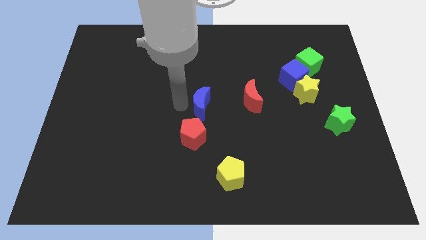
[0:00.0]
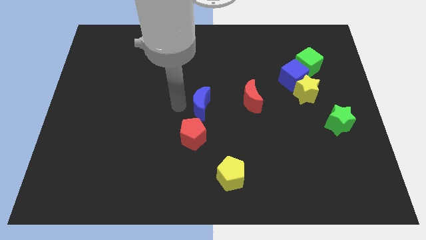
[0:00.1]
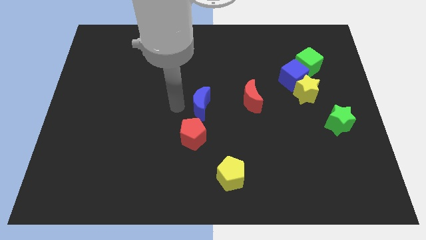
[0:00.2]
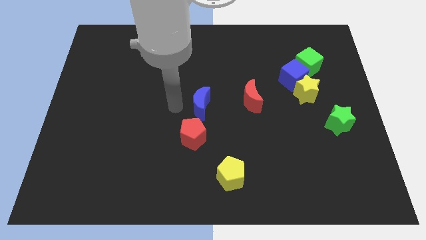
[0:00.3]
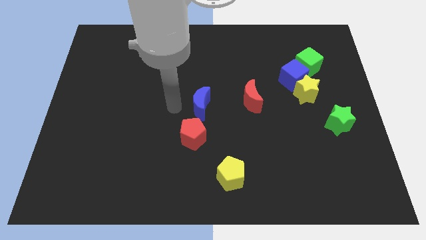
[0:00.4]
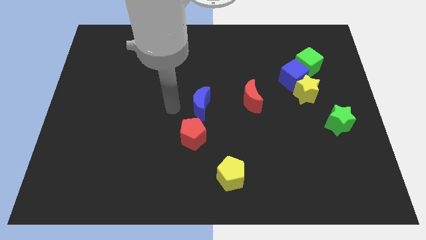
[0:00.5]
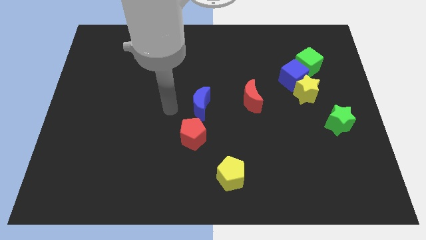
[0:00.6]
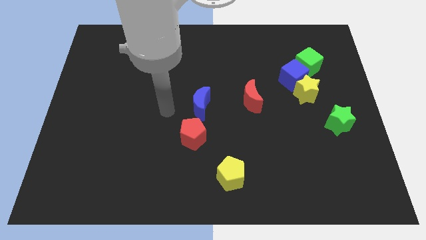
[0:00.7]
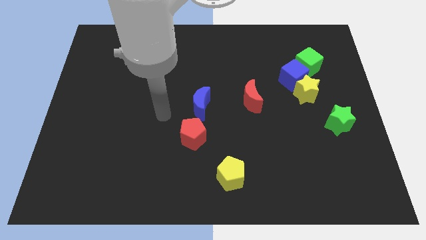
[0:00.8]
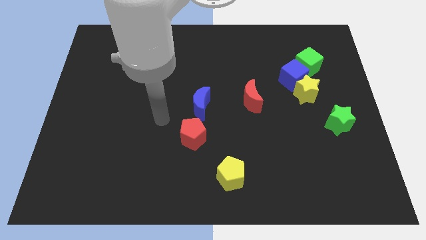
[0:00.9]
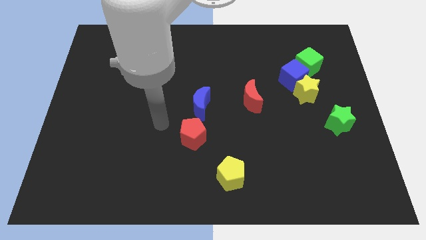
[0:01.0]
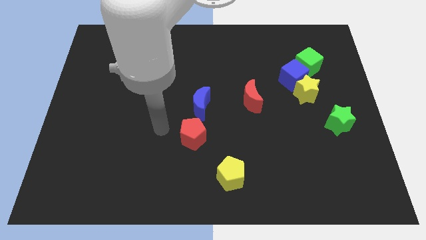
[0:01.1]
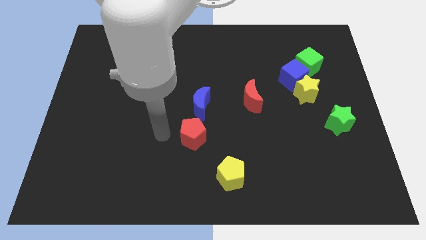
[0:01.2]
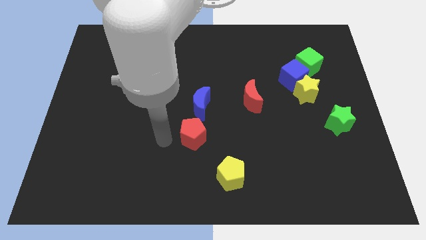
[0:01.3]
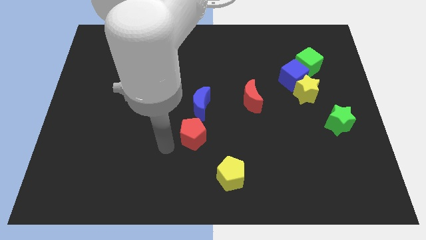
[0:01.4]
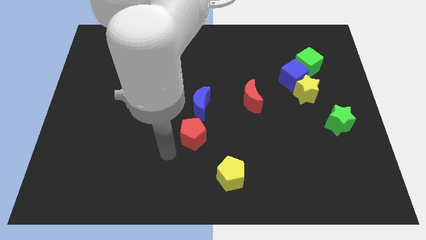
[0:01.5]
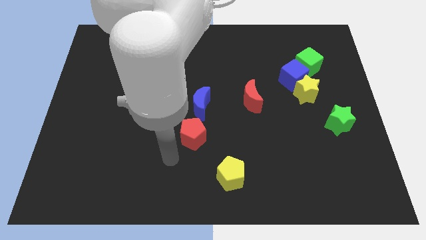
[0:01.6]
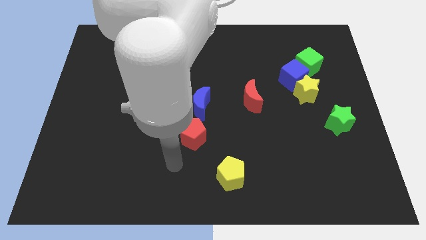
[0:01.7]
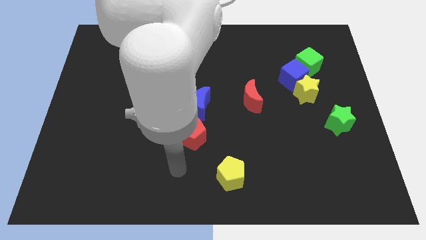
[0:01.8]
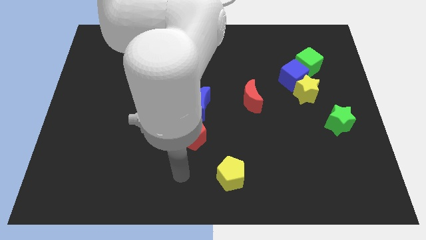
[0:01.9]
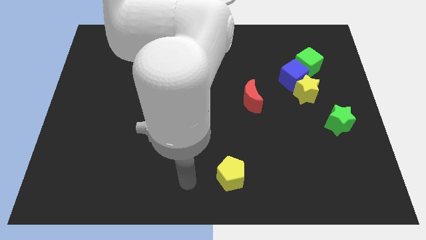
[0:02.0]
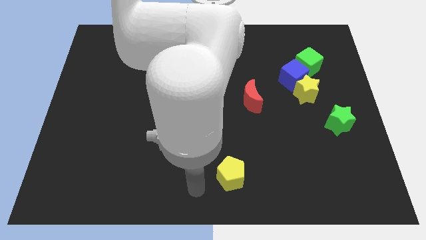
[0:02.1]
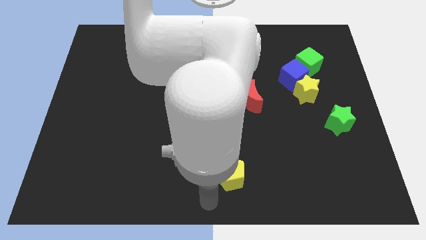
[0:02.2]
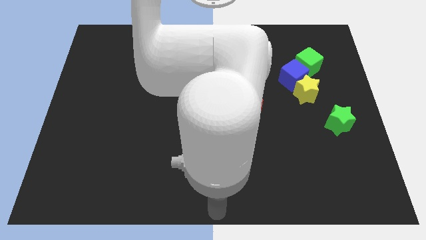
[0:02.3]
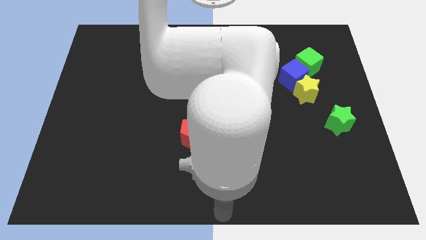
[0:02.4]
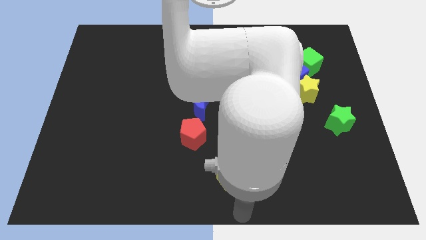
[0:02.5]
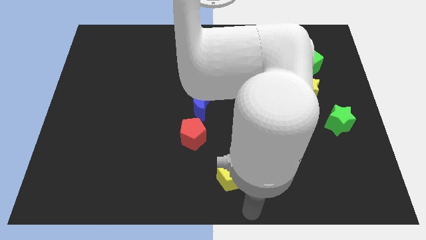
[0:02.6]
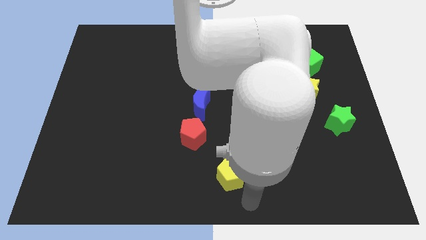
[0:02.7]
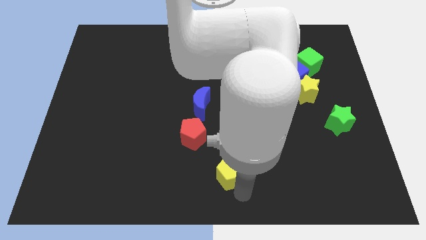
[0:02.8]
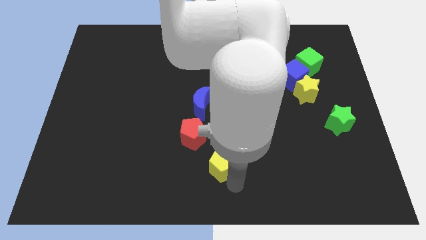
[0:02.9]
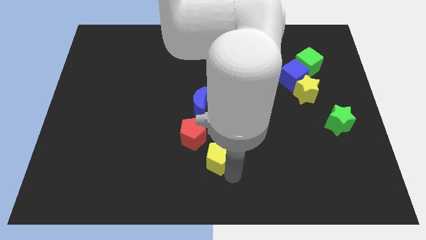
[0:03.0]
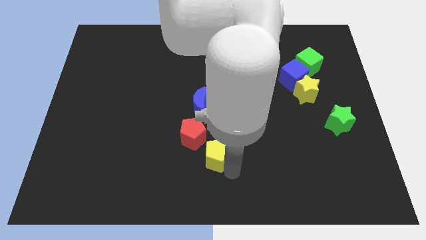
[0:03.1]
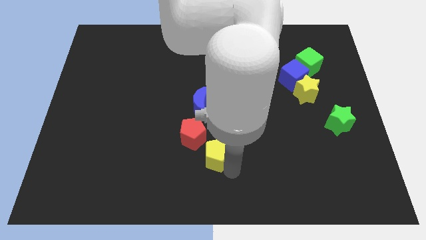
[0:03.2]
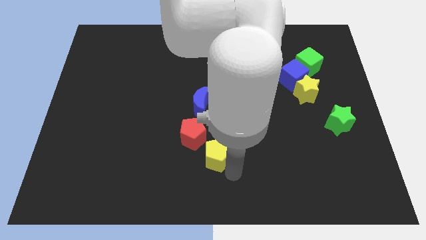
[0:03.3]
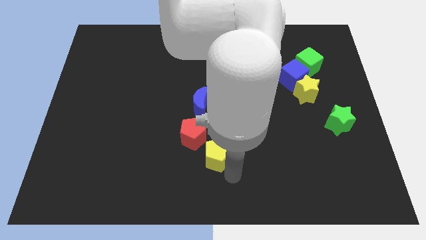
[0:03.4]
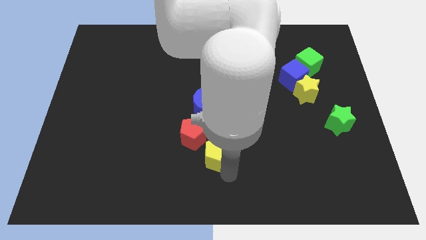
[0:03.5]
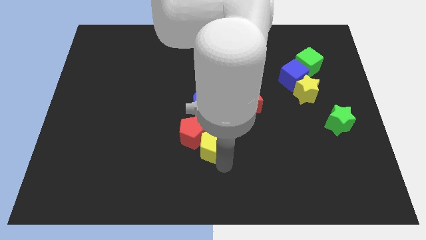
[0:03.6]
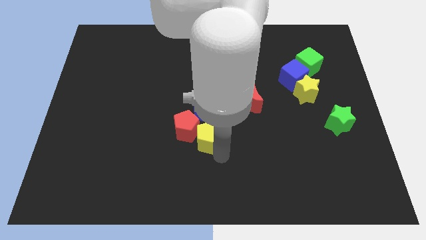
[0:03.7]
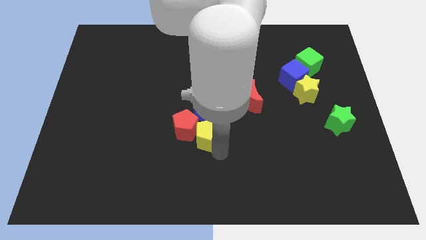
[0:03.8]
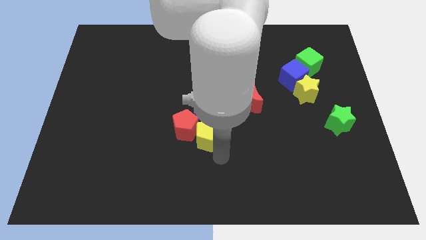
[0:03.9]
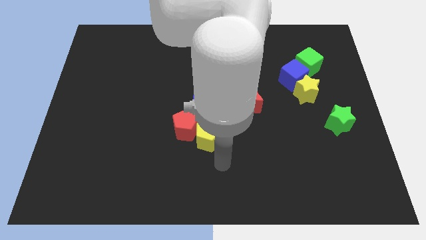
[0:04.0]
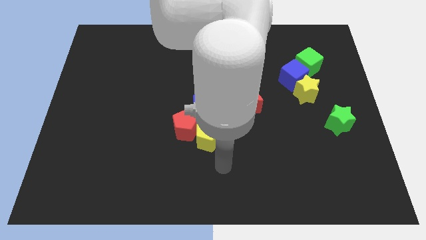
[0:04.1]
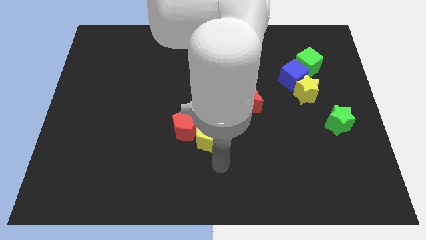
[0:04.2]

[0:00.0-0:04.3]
push the yellow pentagon into the red pentagon

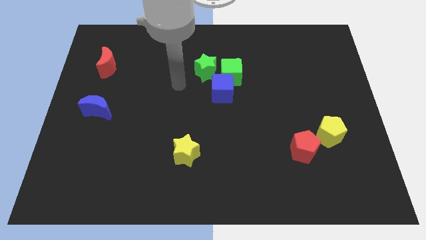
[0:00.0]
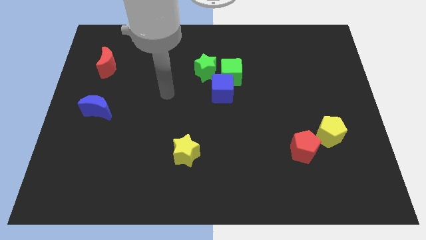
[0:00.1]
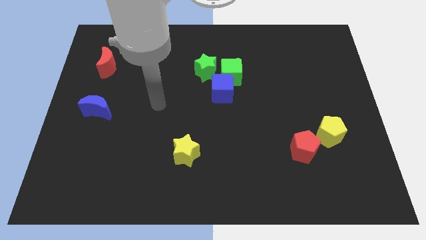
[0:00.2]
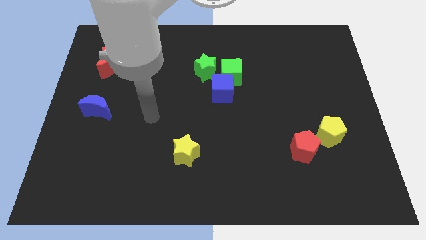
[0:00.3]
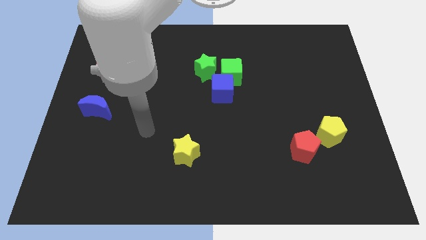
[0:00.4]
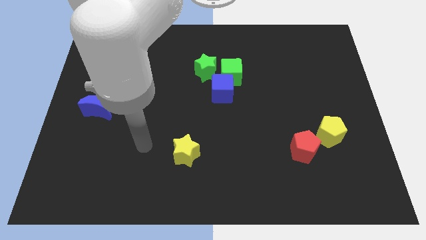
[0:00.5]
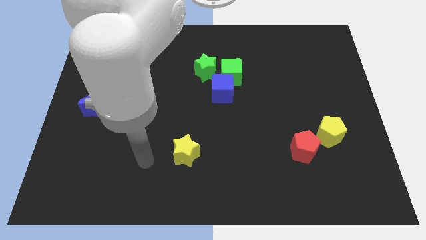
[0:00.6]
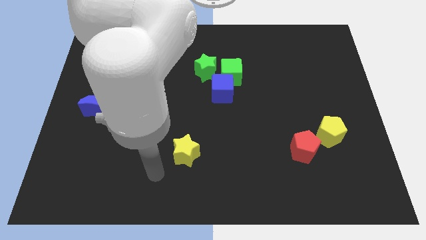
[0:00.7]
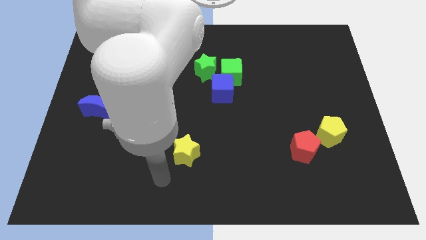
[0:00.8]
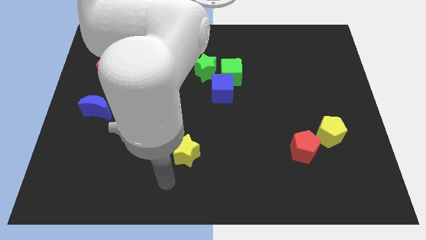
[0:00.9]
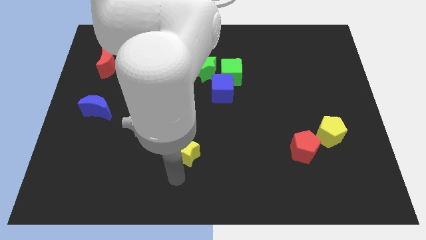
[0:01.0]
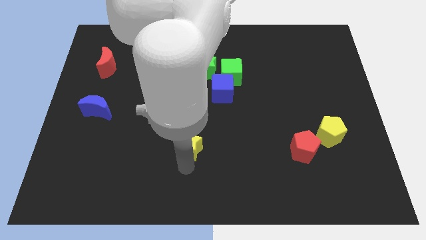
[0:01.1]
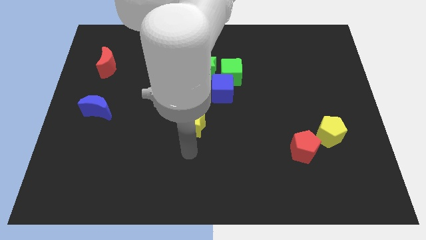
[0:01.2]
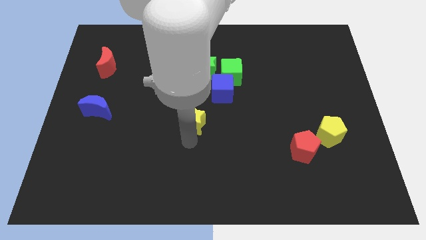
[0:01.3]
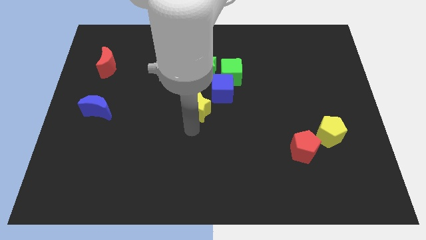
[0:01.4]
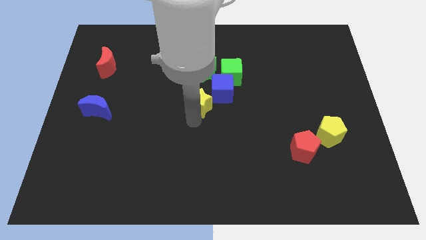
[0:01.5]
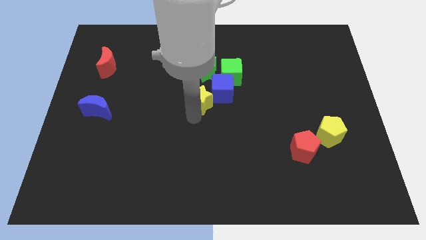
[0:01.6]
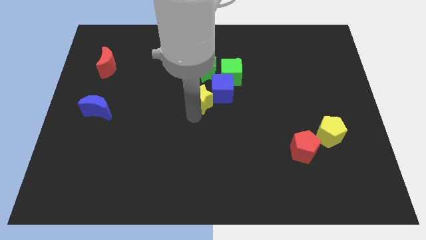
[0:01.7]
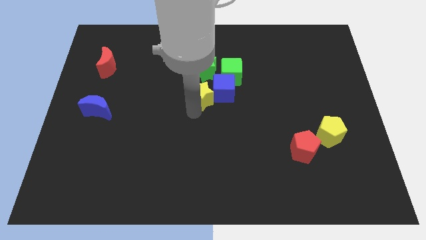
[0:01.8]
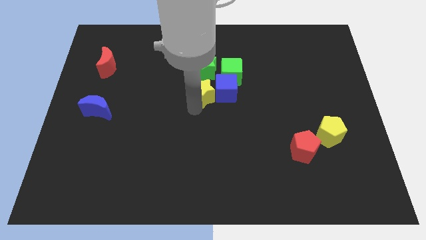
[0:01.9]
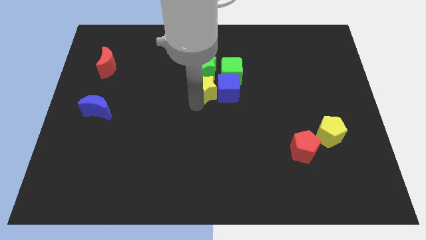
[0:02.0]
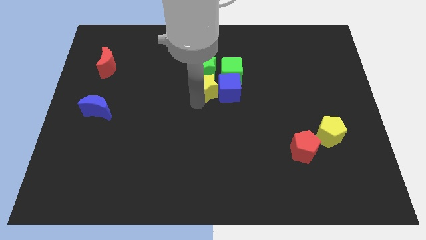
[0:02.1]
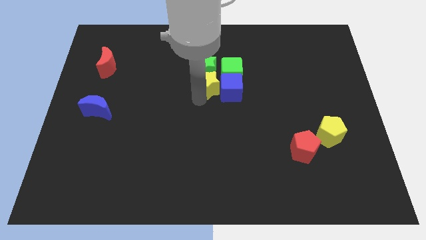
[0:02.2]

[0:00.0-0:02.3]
push yellow star left to blue cube

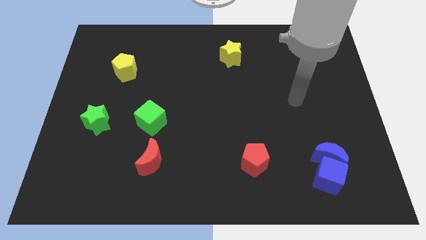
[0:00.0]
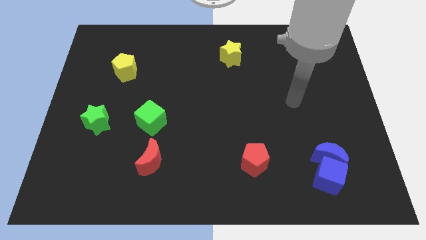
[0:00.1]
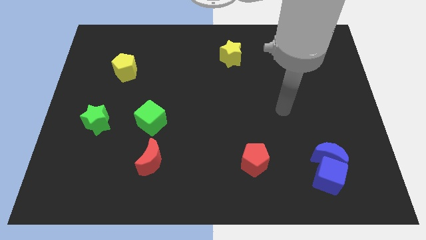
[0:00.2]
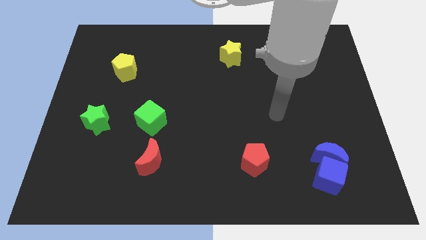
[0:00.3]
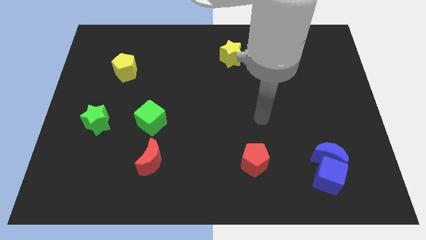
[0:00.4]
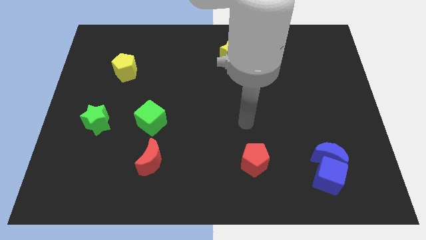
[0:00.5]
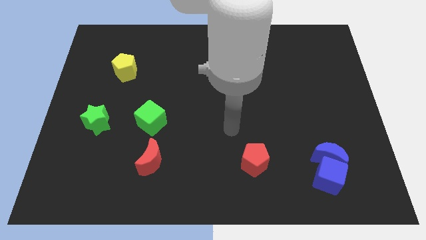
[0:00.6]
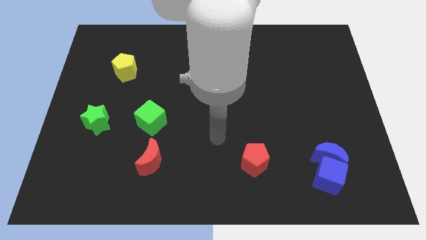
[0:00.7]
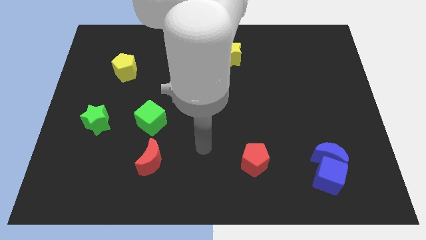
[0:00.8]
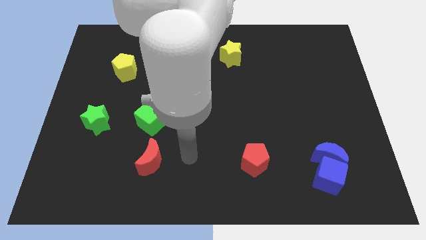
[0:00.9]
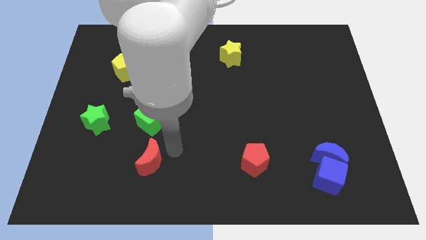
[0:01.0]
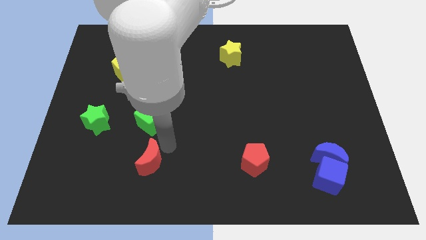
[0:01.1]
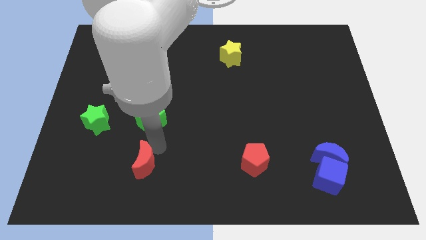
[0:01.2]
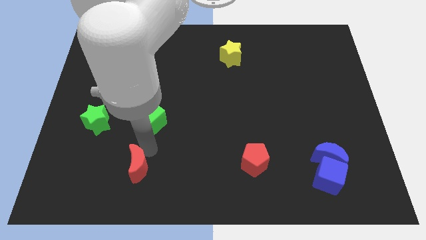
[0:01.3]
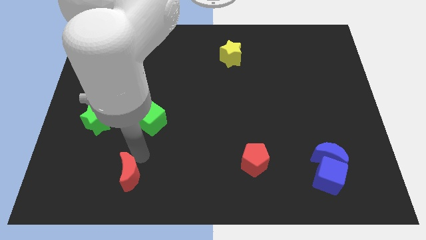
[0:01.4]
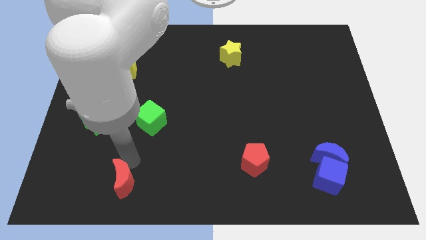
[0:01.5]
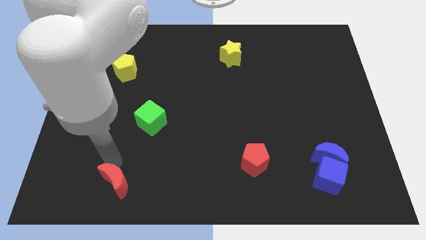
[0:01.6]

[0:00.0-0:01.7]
move the red crescent slightly to the bottom left

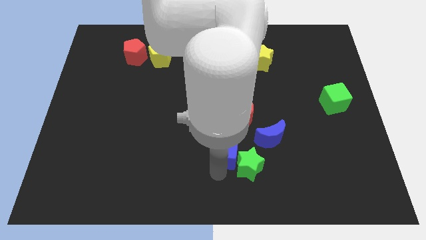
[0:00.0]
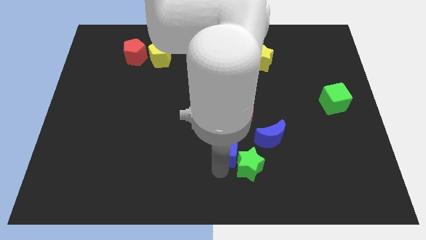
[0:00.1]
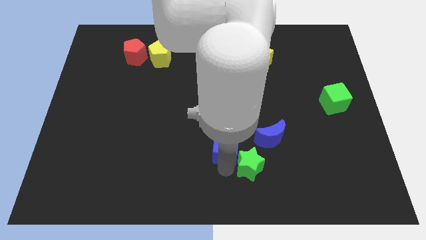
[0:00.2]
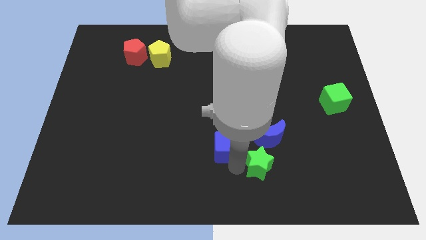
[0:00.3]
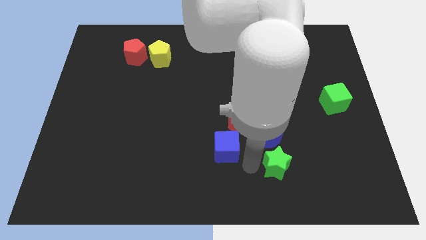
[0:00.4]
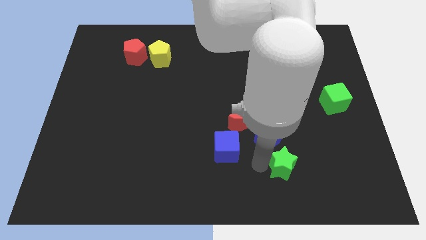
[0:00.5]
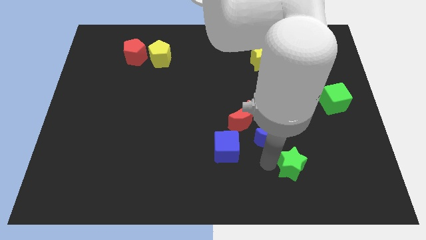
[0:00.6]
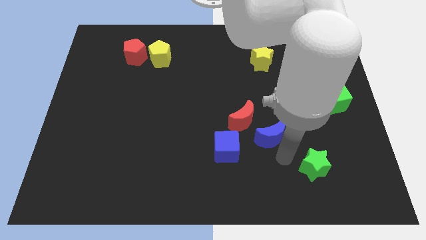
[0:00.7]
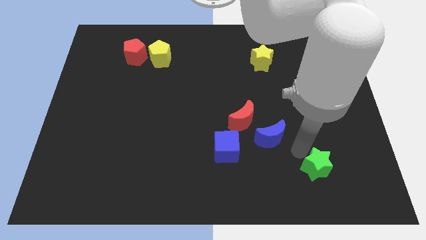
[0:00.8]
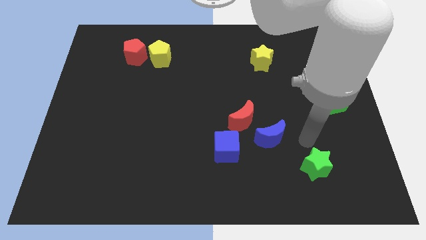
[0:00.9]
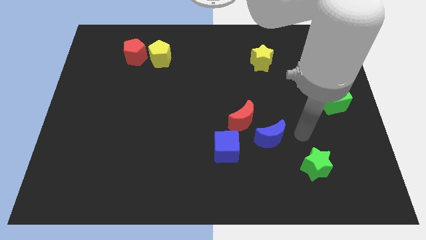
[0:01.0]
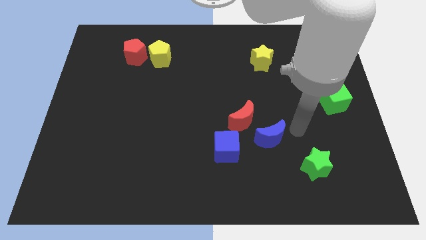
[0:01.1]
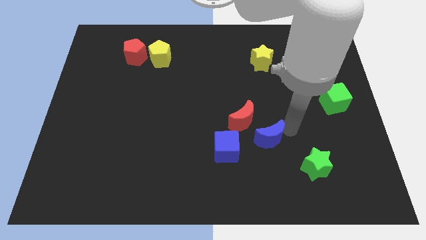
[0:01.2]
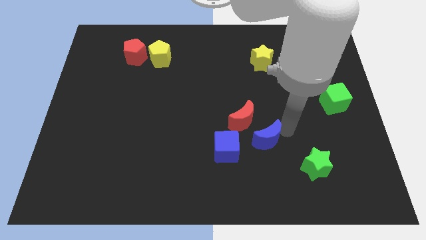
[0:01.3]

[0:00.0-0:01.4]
separate the green star from the blue cube
